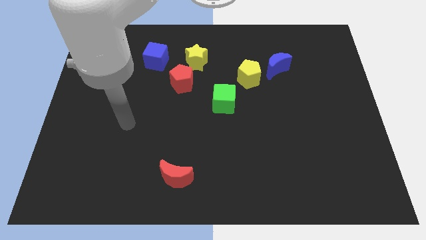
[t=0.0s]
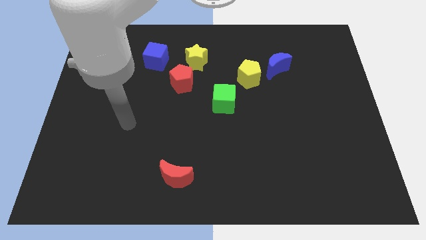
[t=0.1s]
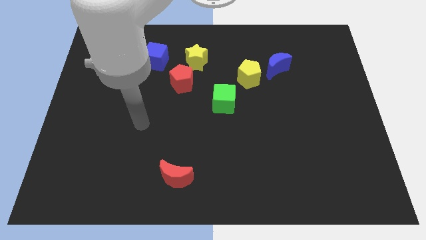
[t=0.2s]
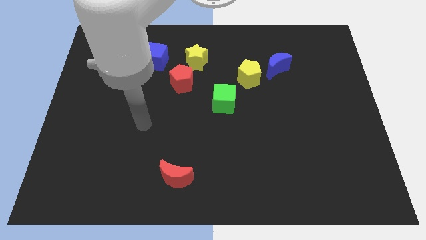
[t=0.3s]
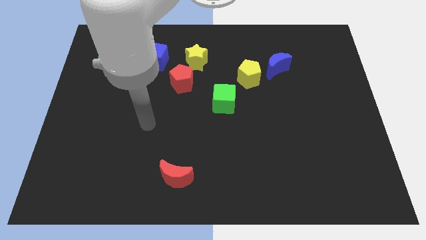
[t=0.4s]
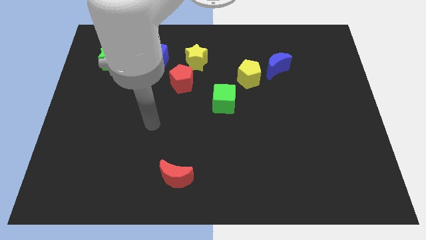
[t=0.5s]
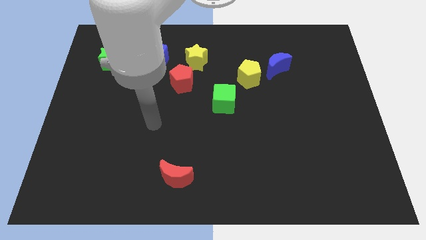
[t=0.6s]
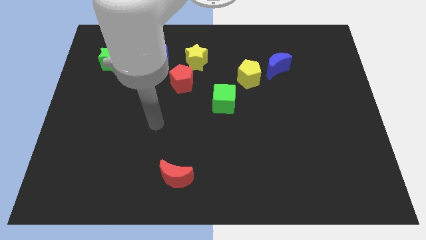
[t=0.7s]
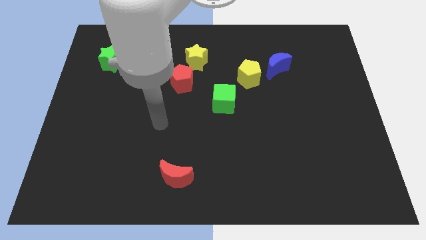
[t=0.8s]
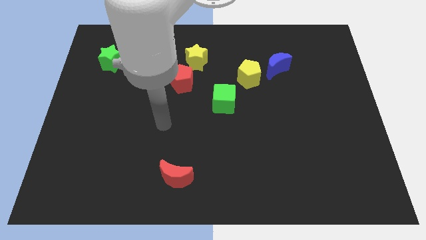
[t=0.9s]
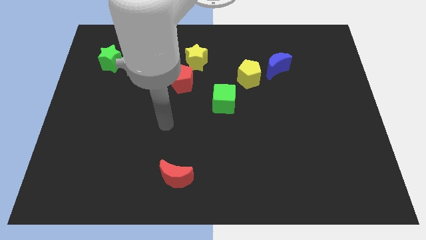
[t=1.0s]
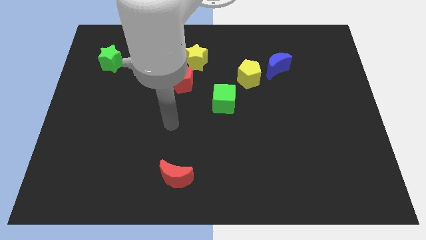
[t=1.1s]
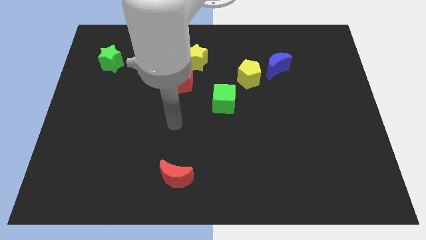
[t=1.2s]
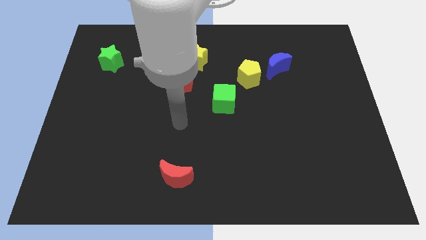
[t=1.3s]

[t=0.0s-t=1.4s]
point your hand at the top side of the red crescent

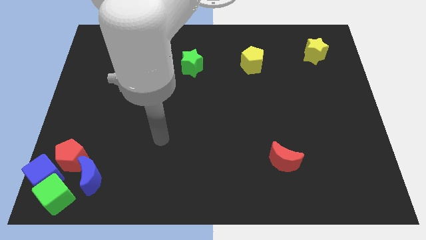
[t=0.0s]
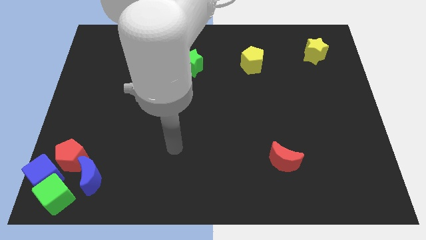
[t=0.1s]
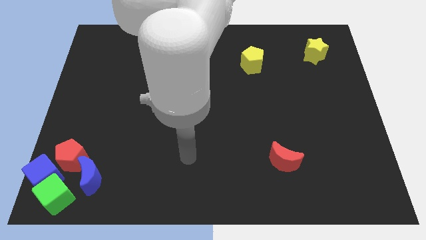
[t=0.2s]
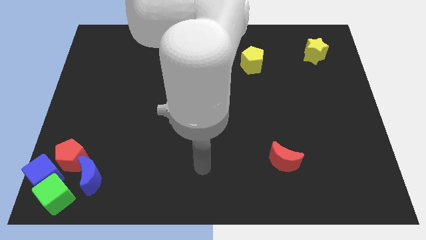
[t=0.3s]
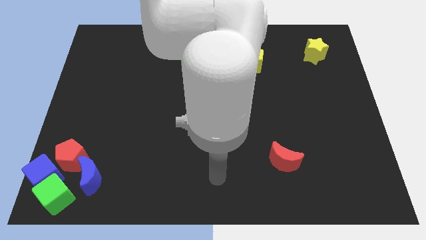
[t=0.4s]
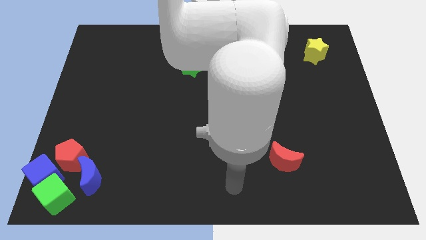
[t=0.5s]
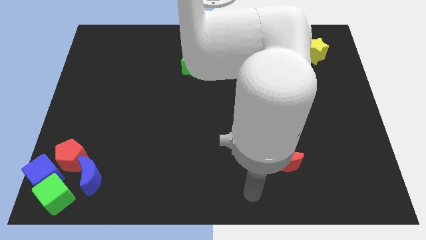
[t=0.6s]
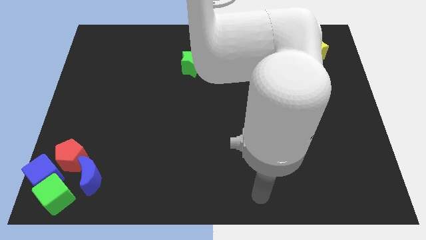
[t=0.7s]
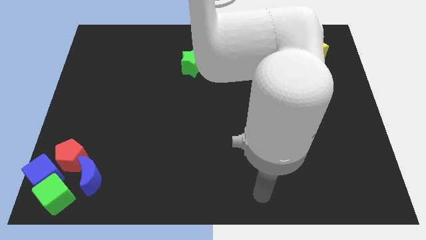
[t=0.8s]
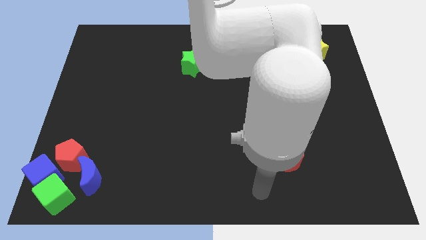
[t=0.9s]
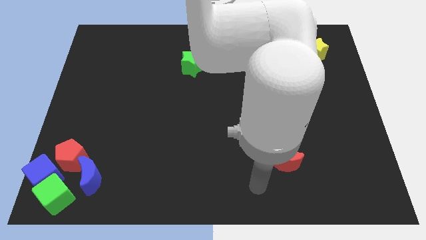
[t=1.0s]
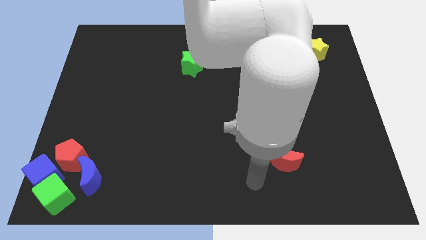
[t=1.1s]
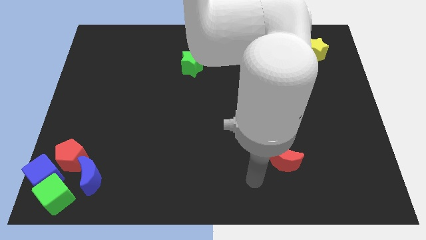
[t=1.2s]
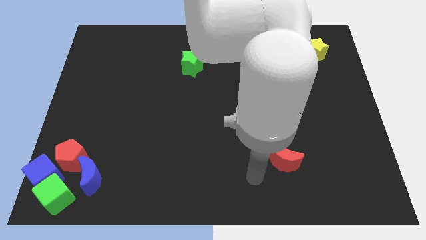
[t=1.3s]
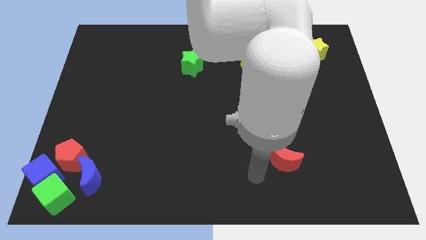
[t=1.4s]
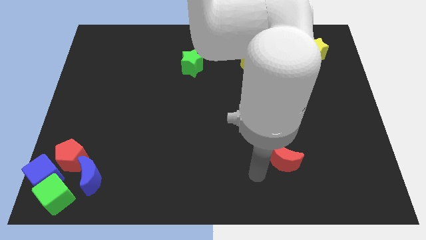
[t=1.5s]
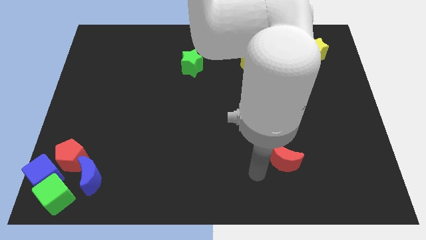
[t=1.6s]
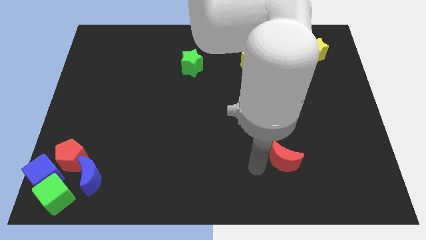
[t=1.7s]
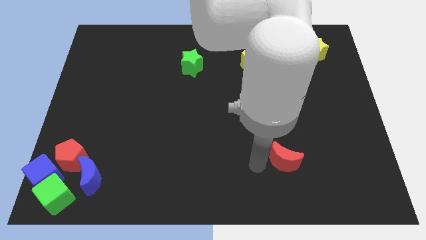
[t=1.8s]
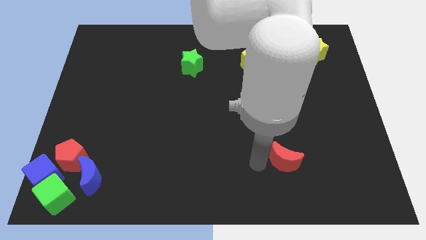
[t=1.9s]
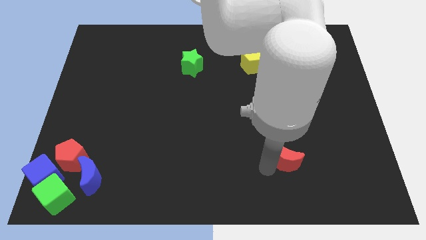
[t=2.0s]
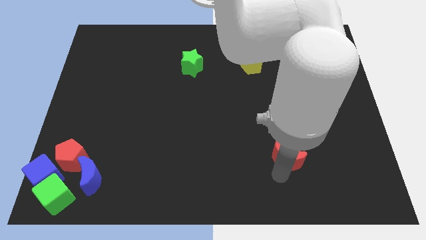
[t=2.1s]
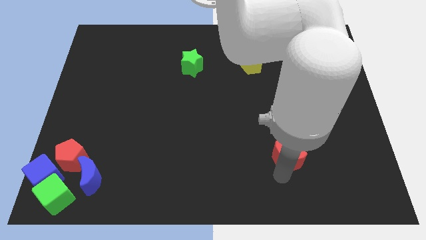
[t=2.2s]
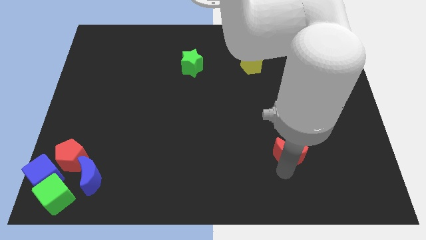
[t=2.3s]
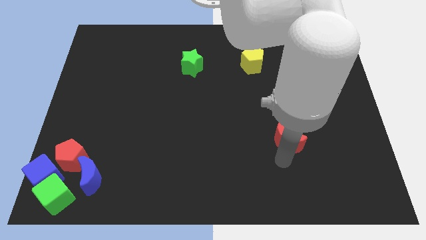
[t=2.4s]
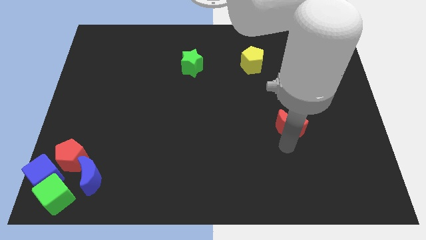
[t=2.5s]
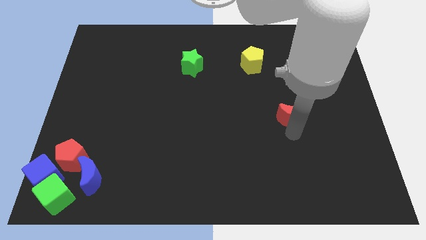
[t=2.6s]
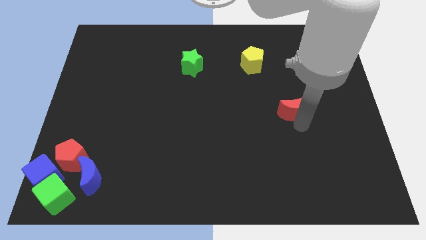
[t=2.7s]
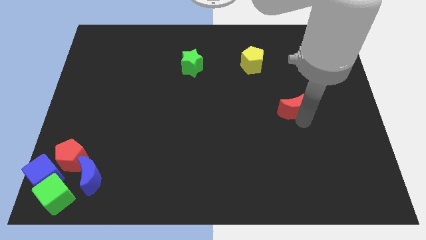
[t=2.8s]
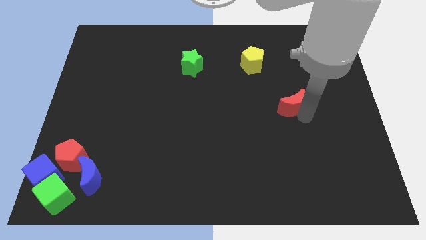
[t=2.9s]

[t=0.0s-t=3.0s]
place the red moon diagonally to yellow pentagon

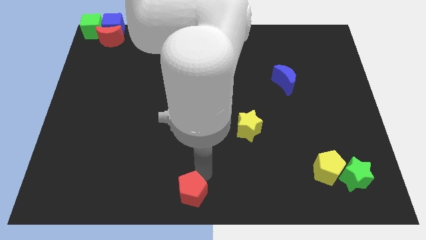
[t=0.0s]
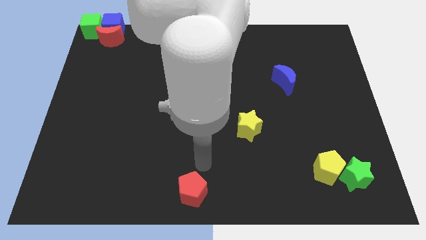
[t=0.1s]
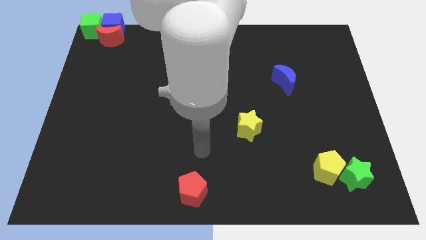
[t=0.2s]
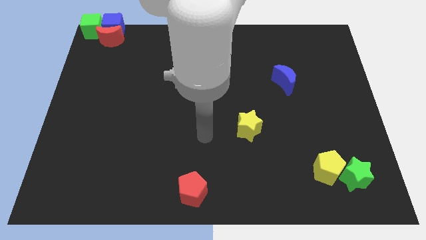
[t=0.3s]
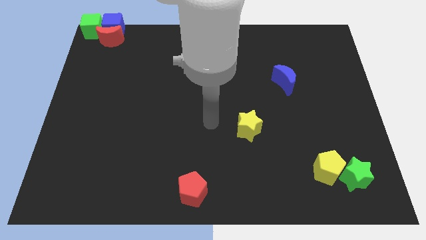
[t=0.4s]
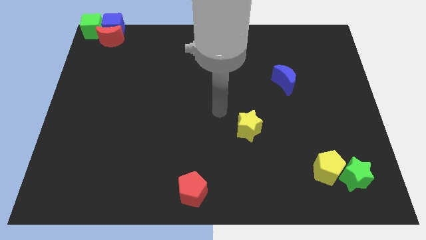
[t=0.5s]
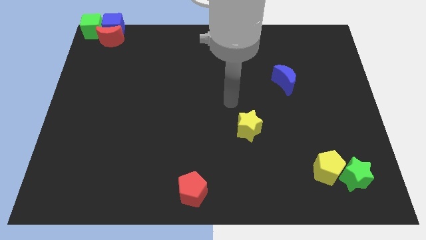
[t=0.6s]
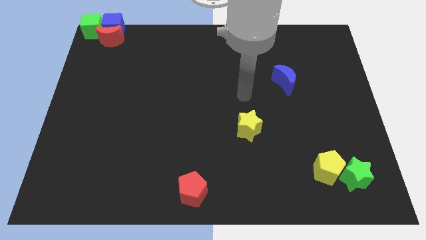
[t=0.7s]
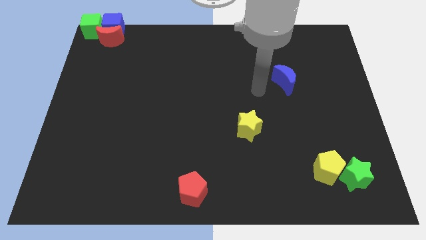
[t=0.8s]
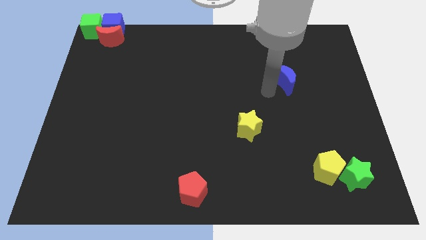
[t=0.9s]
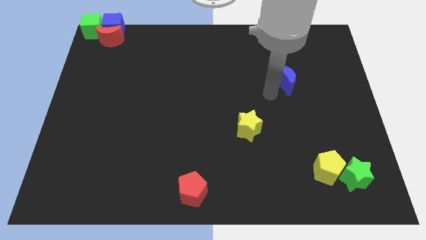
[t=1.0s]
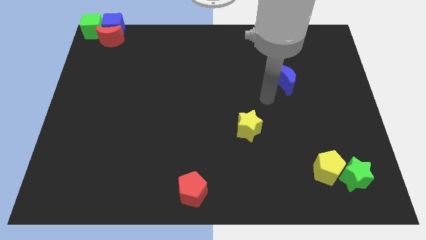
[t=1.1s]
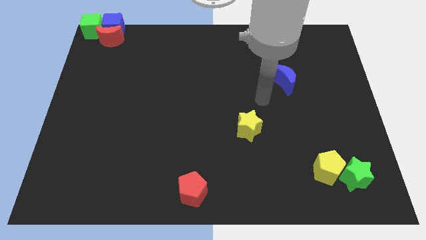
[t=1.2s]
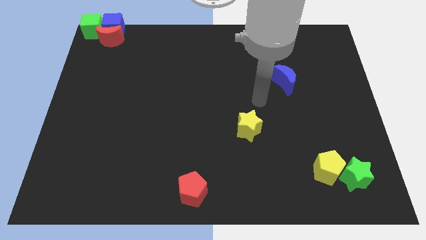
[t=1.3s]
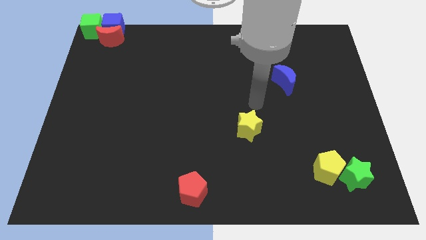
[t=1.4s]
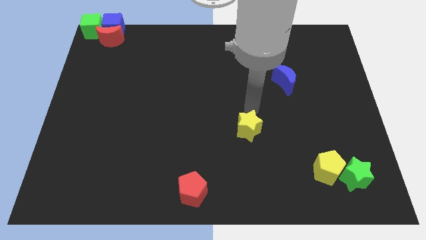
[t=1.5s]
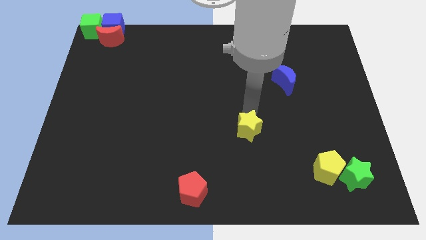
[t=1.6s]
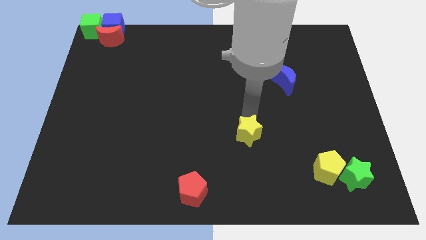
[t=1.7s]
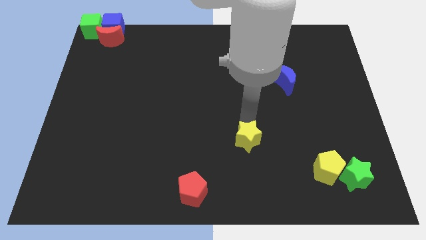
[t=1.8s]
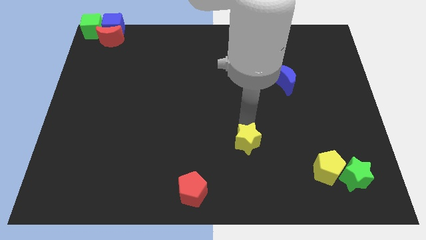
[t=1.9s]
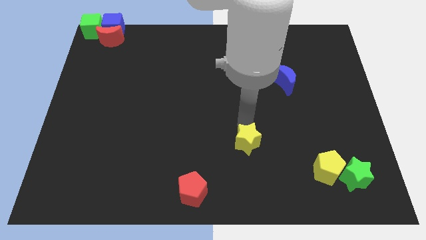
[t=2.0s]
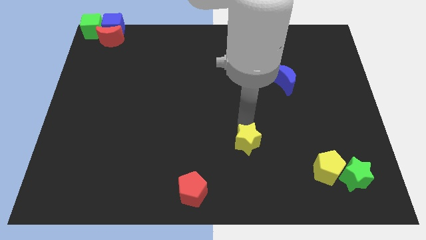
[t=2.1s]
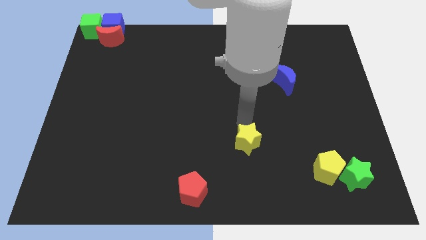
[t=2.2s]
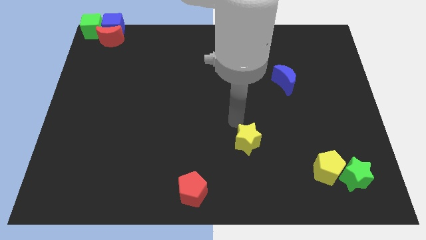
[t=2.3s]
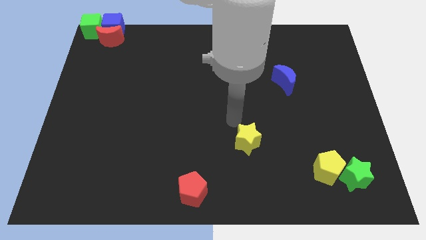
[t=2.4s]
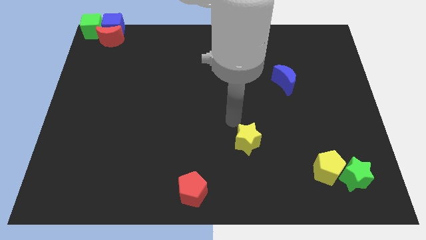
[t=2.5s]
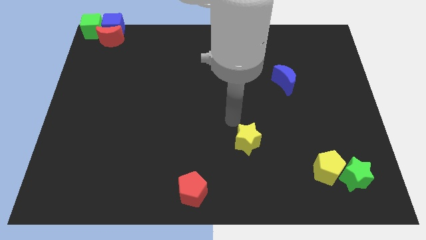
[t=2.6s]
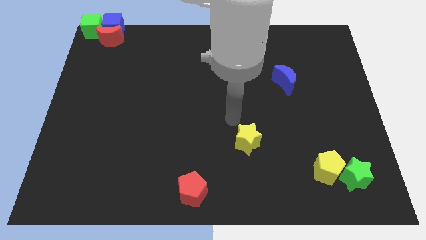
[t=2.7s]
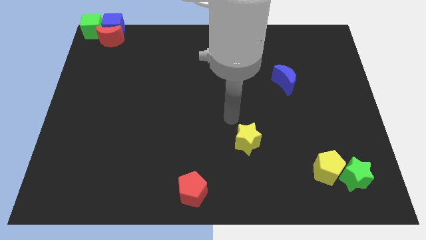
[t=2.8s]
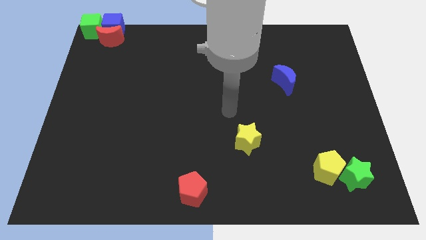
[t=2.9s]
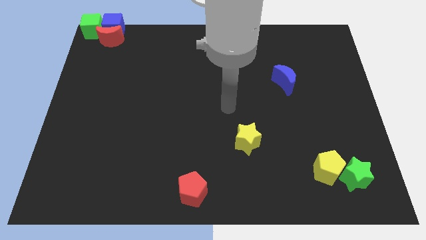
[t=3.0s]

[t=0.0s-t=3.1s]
drag the yellow star downwards slightly

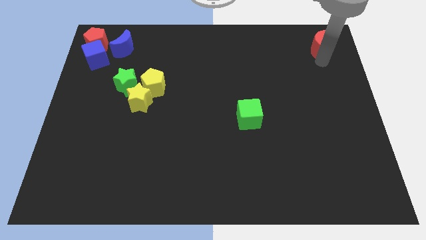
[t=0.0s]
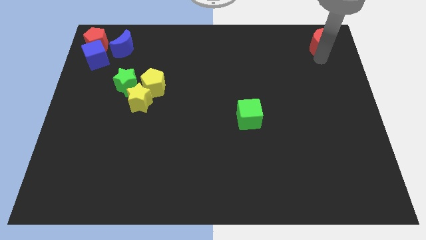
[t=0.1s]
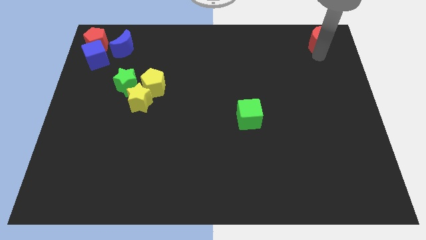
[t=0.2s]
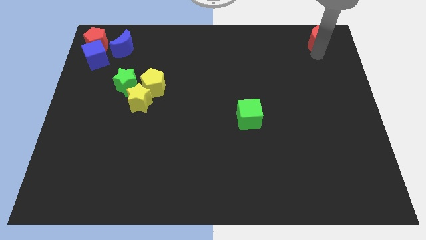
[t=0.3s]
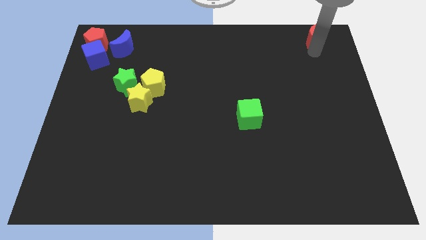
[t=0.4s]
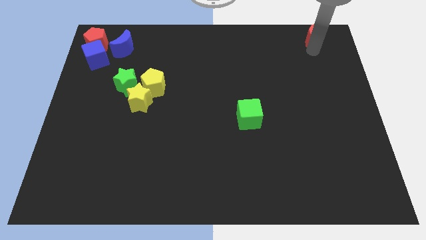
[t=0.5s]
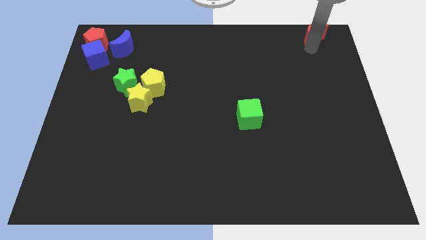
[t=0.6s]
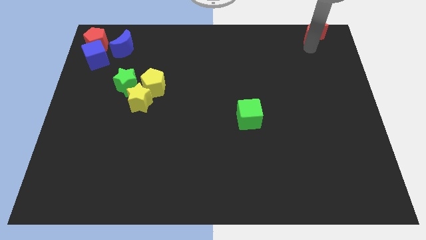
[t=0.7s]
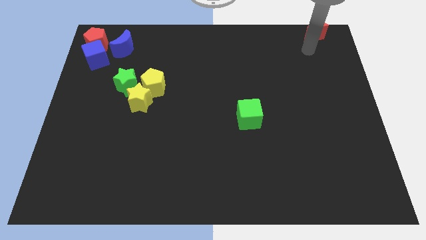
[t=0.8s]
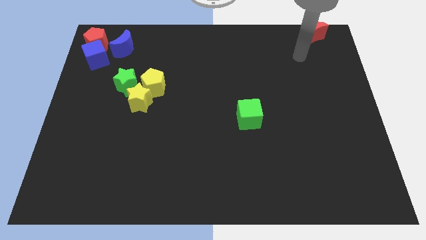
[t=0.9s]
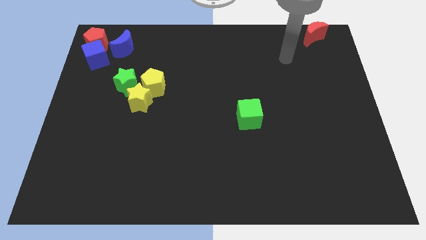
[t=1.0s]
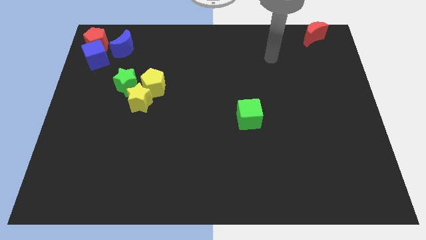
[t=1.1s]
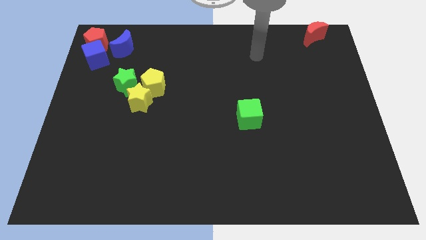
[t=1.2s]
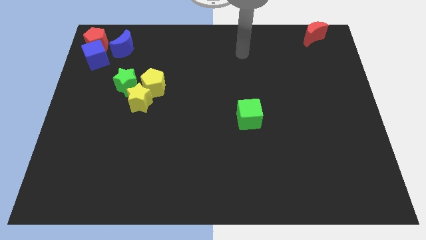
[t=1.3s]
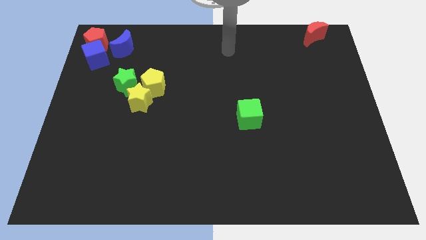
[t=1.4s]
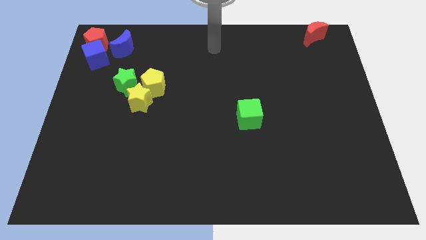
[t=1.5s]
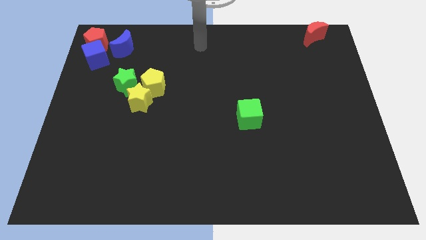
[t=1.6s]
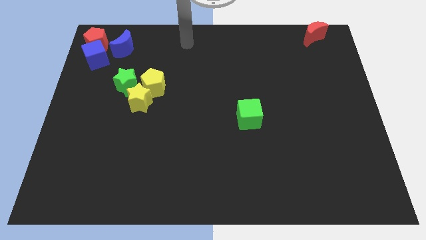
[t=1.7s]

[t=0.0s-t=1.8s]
push the red moon to the top right side
